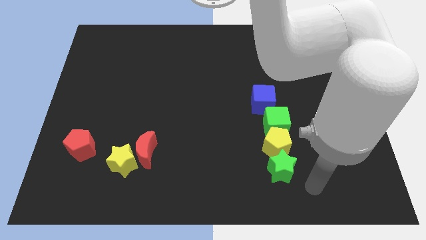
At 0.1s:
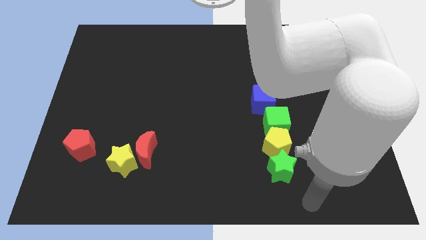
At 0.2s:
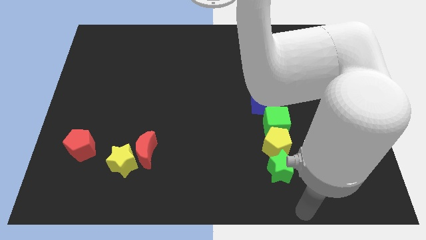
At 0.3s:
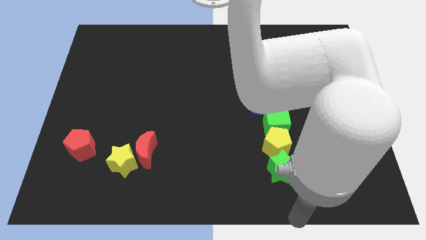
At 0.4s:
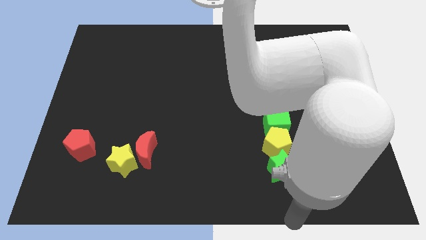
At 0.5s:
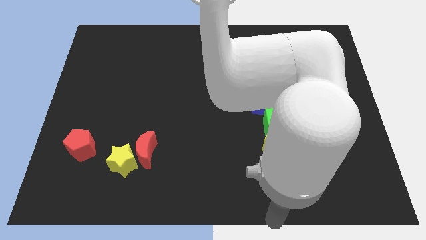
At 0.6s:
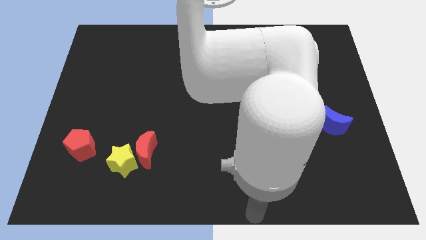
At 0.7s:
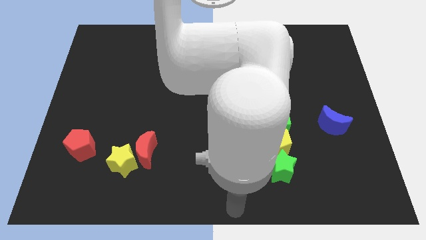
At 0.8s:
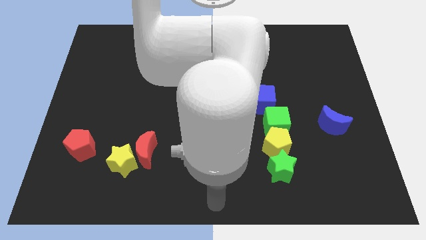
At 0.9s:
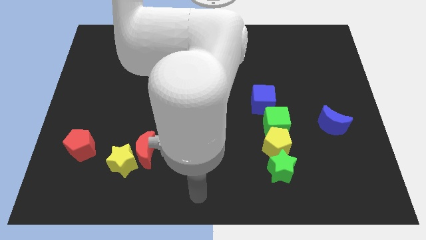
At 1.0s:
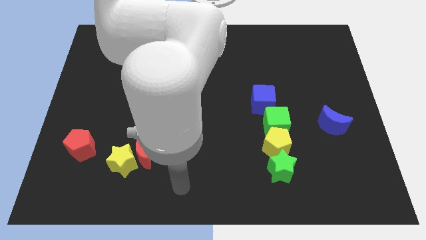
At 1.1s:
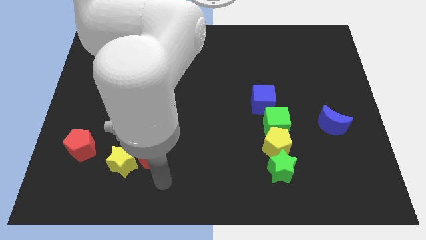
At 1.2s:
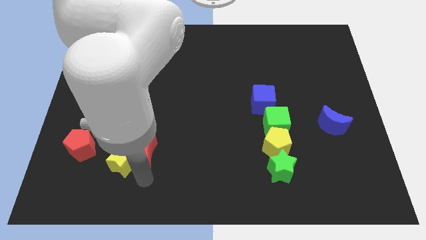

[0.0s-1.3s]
move your arm to the bottom of red moon

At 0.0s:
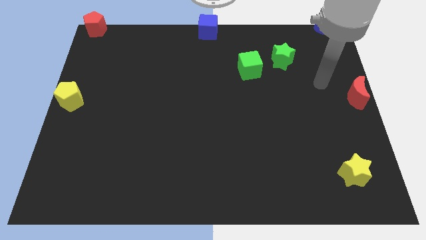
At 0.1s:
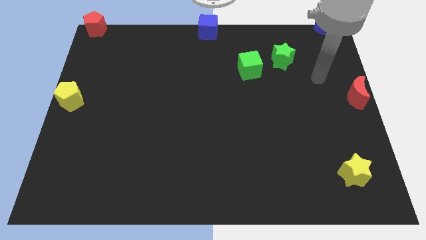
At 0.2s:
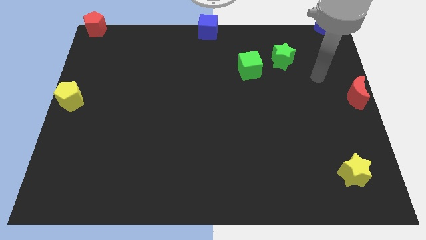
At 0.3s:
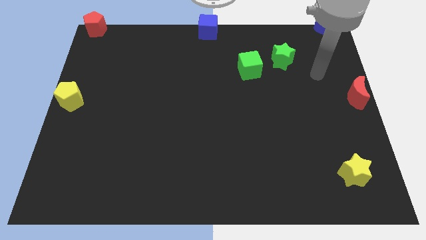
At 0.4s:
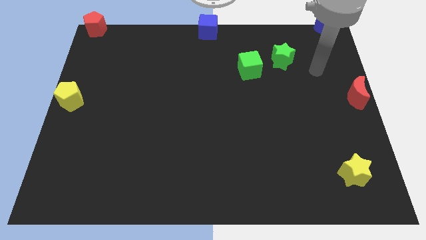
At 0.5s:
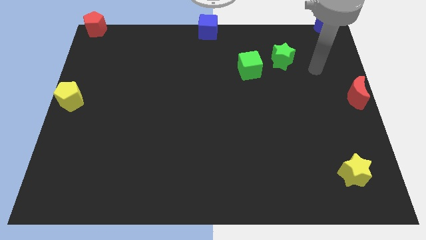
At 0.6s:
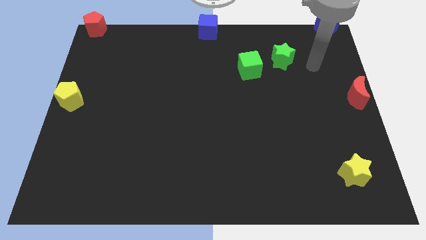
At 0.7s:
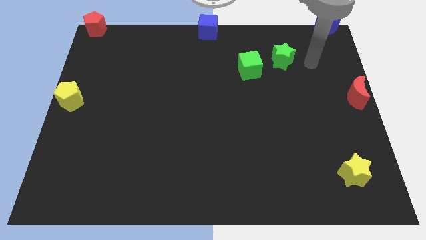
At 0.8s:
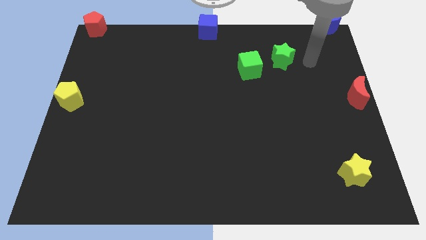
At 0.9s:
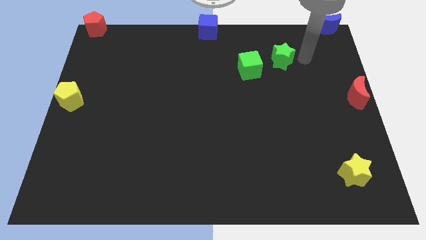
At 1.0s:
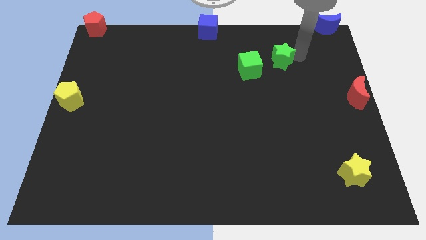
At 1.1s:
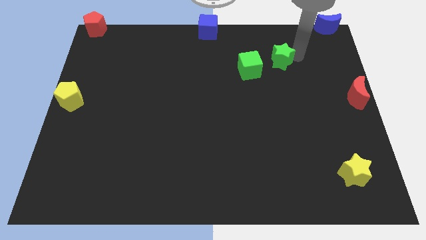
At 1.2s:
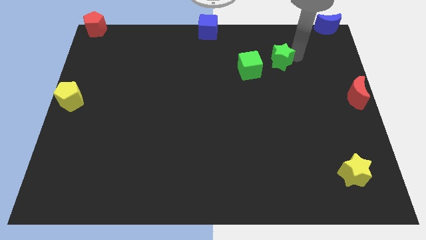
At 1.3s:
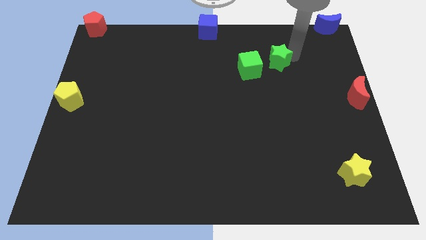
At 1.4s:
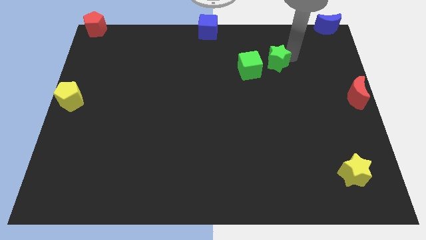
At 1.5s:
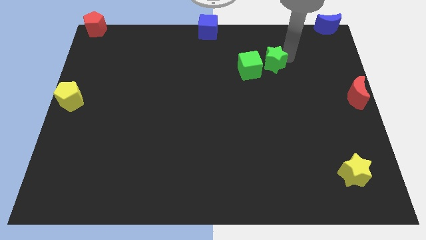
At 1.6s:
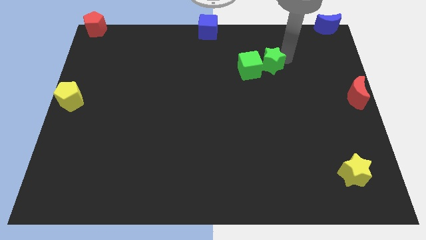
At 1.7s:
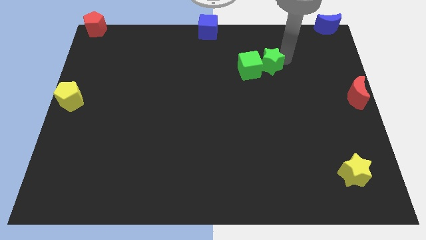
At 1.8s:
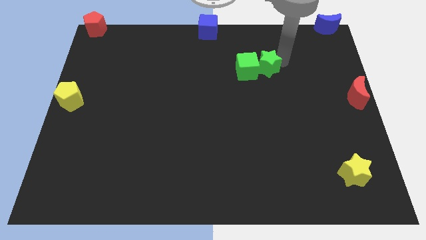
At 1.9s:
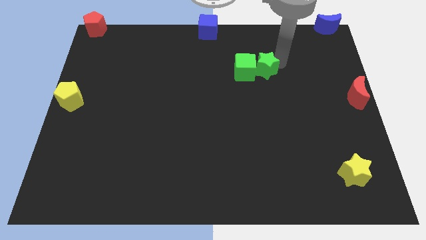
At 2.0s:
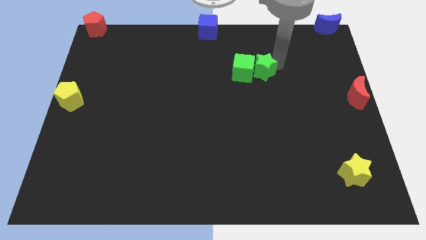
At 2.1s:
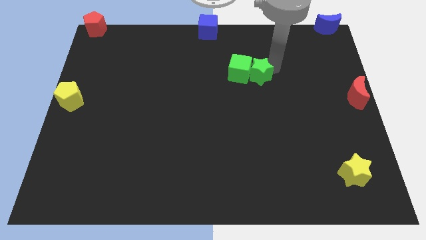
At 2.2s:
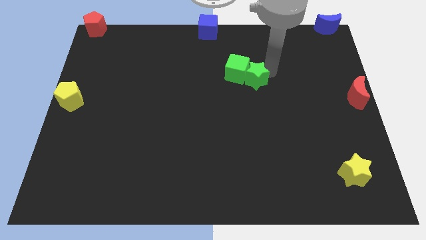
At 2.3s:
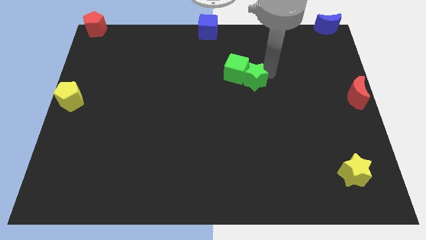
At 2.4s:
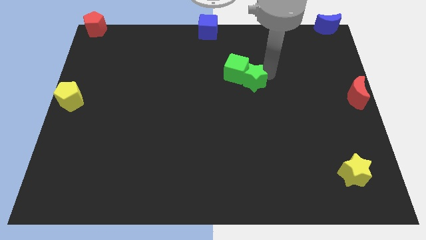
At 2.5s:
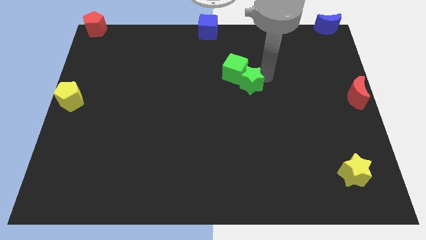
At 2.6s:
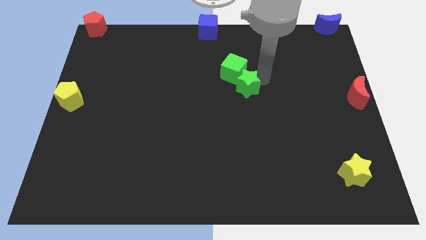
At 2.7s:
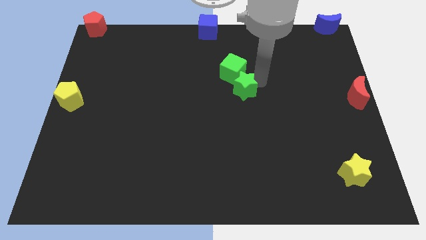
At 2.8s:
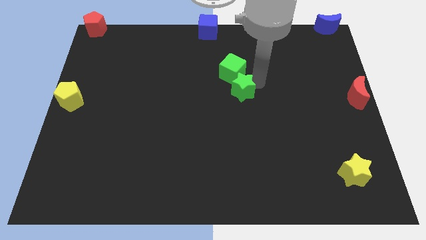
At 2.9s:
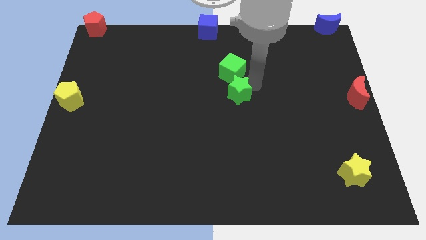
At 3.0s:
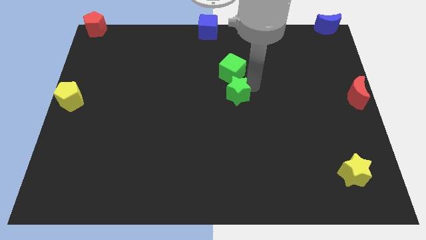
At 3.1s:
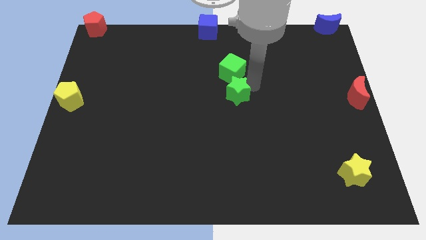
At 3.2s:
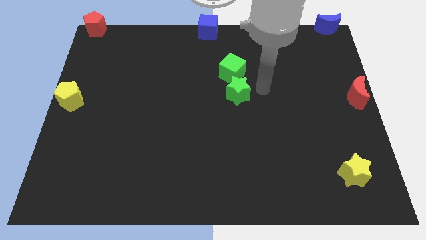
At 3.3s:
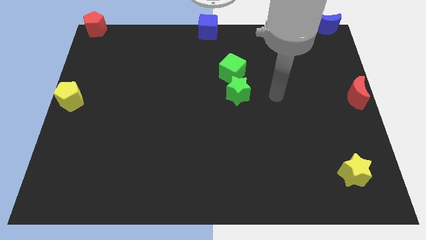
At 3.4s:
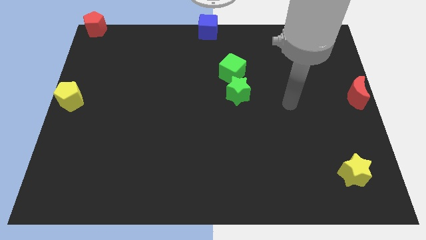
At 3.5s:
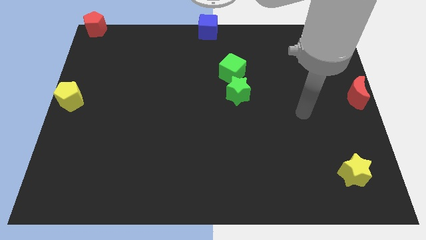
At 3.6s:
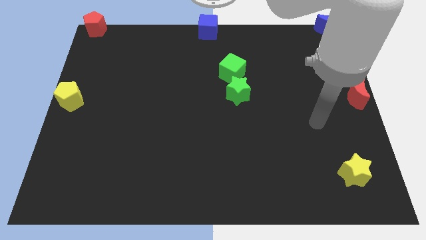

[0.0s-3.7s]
move green star and green cube towards left

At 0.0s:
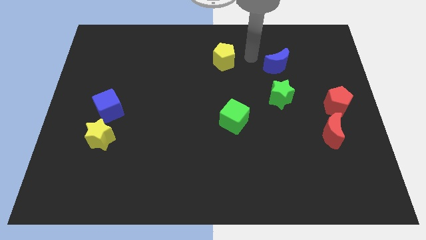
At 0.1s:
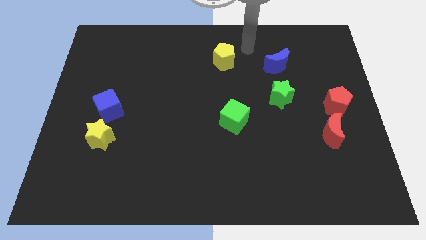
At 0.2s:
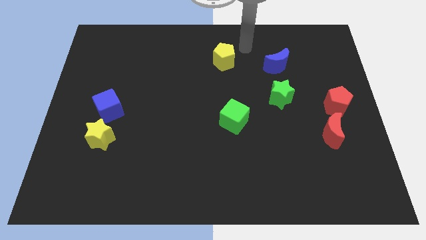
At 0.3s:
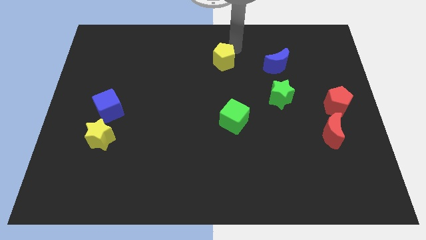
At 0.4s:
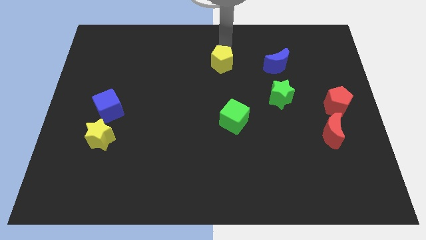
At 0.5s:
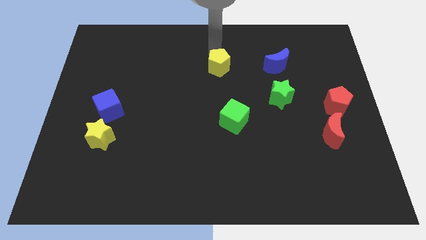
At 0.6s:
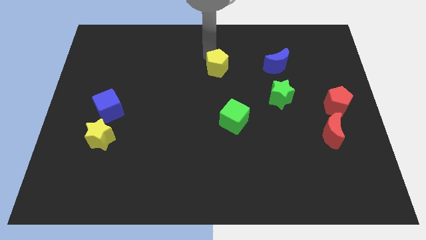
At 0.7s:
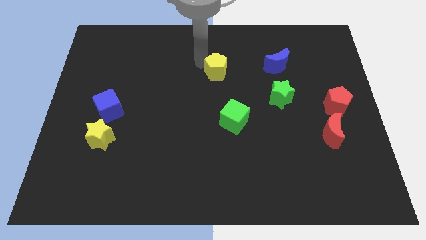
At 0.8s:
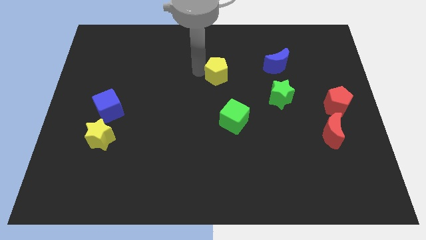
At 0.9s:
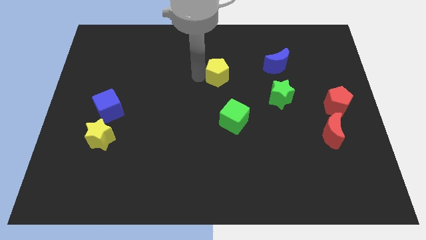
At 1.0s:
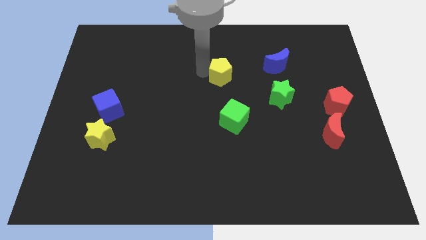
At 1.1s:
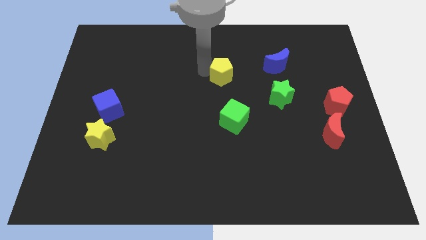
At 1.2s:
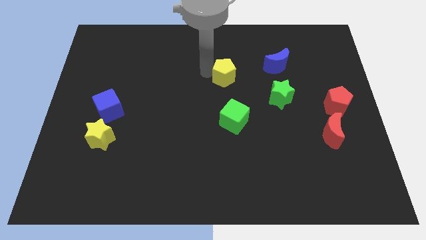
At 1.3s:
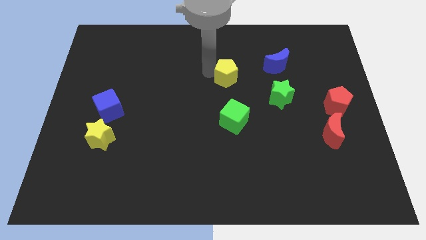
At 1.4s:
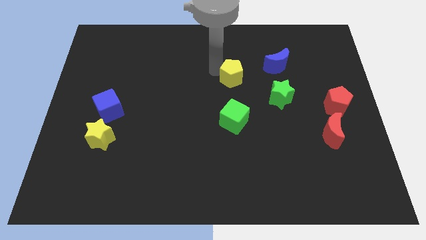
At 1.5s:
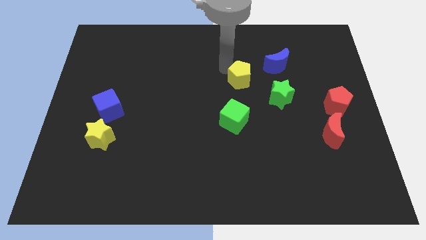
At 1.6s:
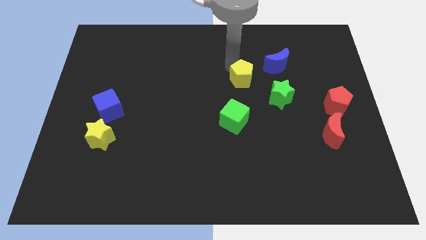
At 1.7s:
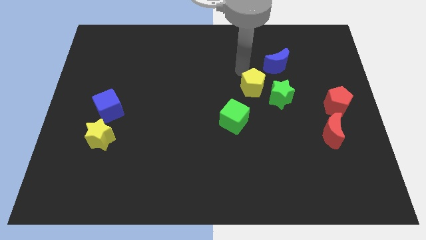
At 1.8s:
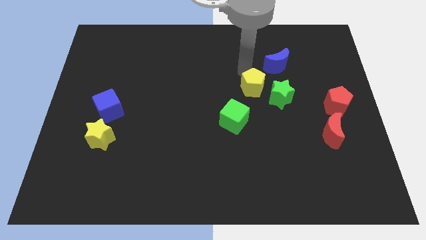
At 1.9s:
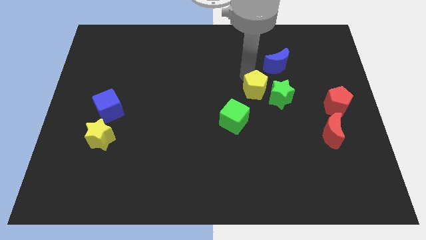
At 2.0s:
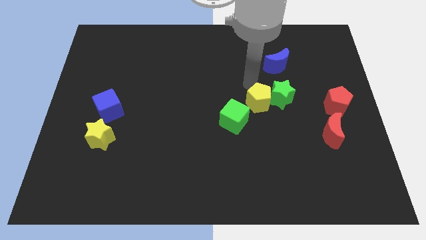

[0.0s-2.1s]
push the yellow pentagon to the left of the green star

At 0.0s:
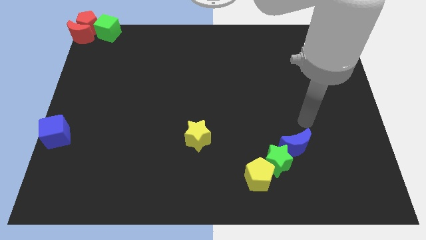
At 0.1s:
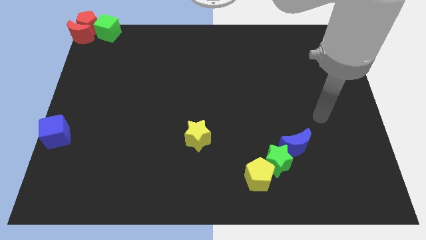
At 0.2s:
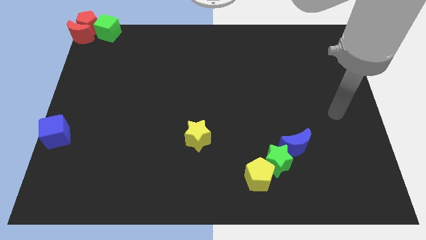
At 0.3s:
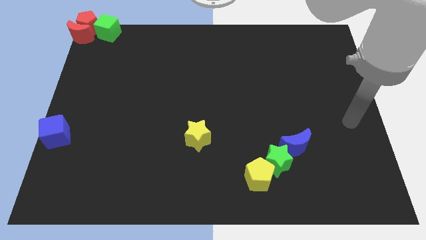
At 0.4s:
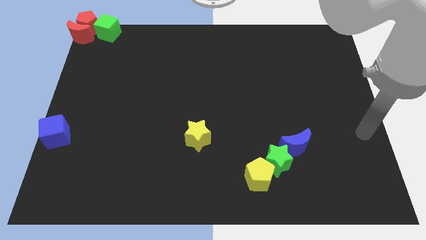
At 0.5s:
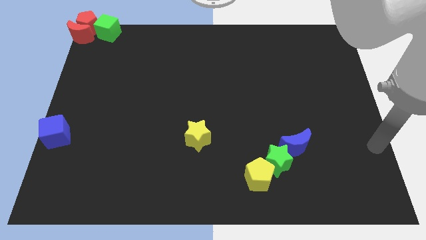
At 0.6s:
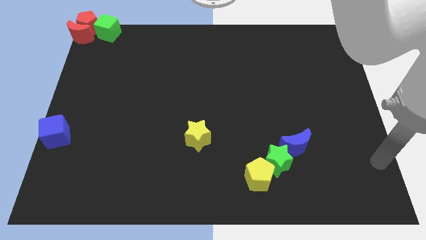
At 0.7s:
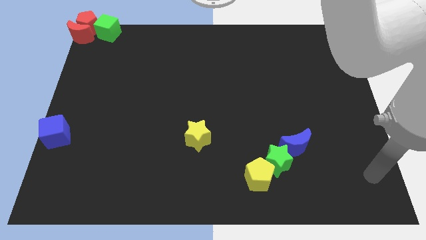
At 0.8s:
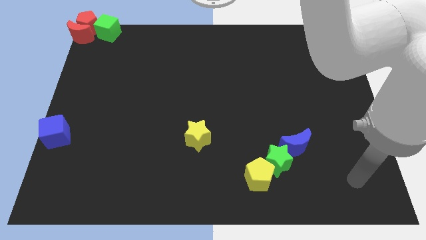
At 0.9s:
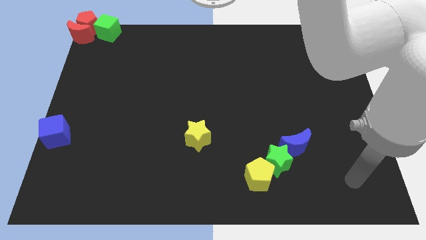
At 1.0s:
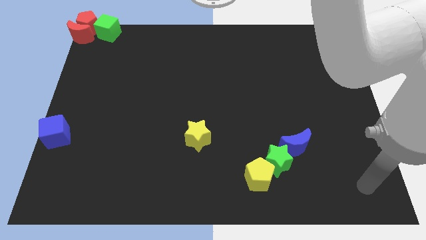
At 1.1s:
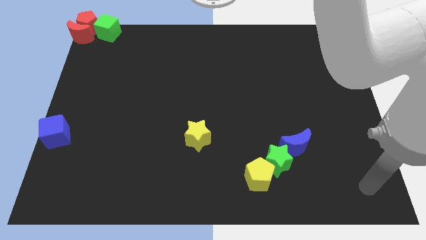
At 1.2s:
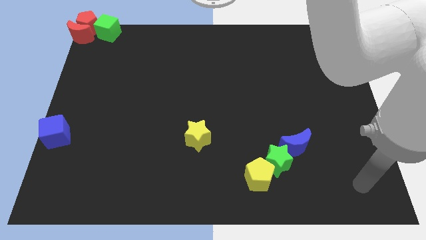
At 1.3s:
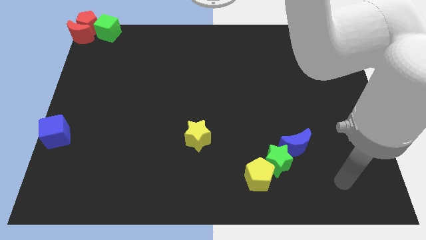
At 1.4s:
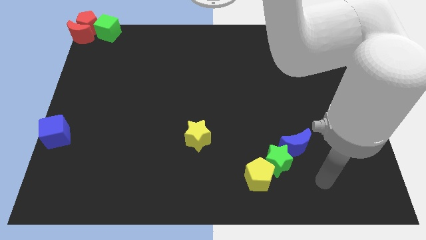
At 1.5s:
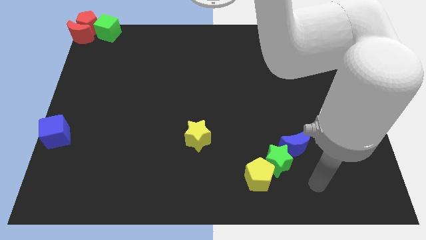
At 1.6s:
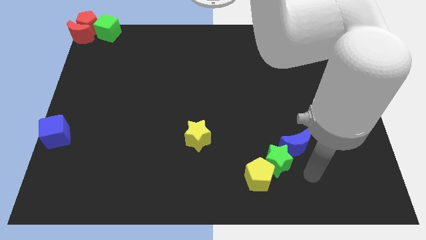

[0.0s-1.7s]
move your arm away from blue moon
